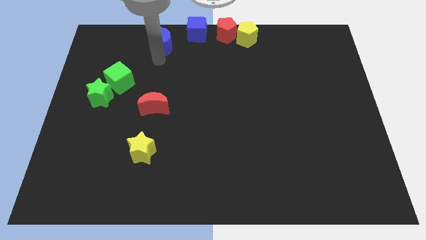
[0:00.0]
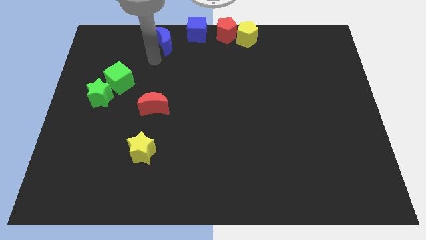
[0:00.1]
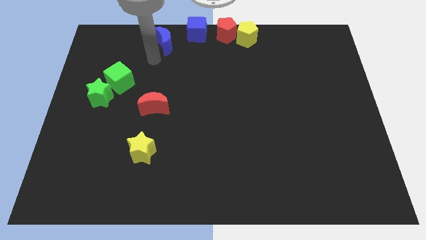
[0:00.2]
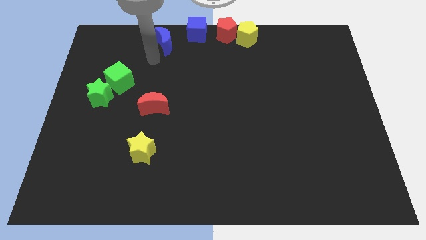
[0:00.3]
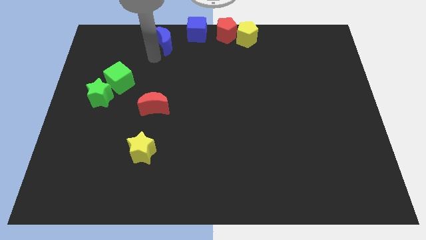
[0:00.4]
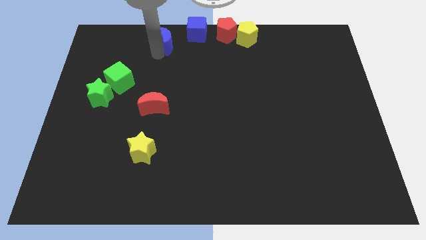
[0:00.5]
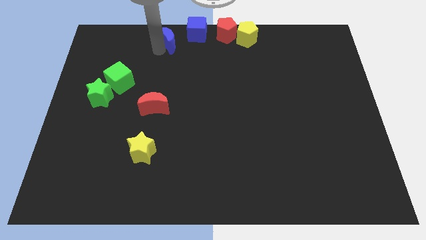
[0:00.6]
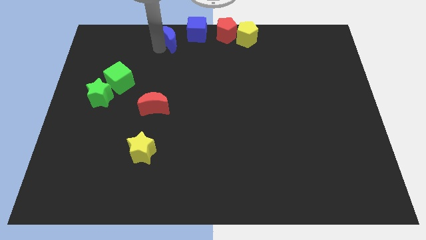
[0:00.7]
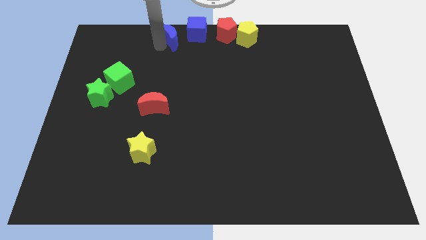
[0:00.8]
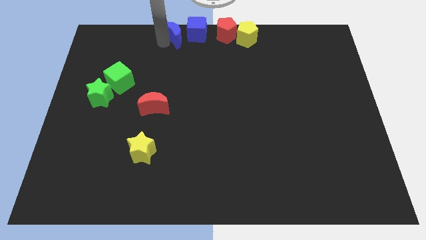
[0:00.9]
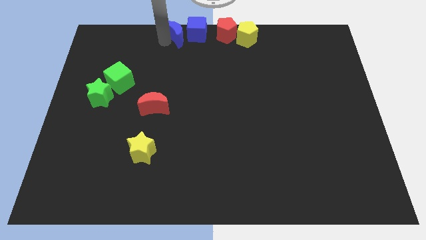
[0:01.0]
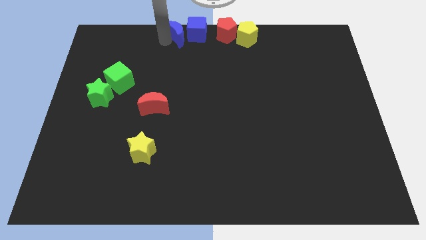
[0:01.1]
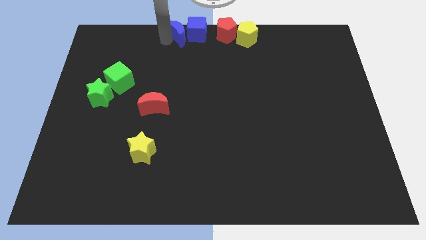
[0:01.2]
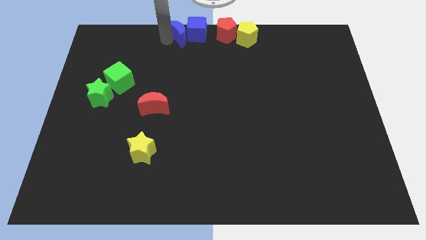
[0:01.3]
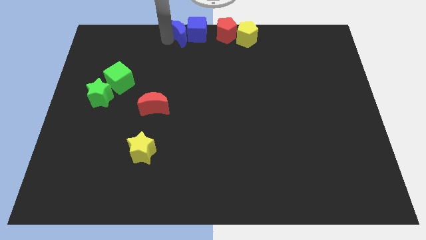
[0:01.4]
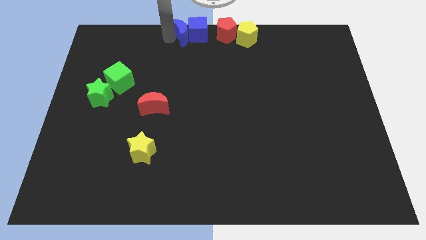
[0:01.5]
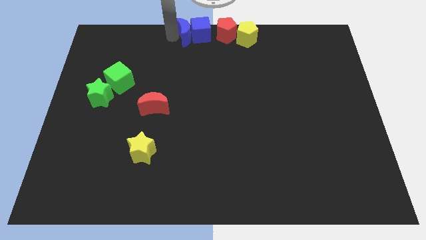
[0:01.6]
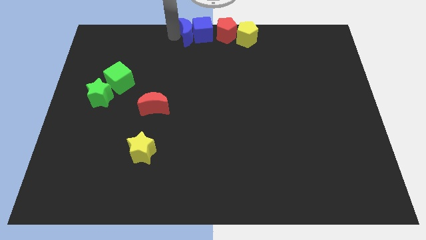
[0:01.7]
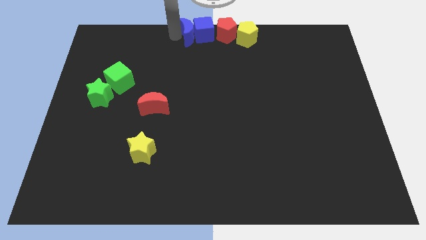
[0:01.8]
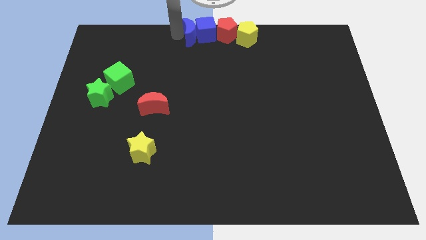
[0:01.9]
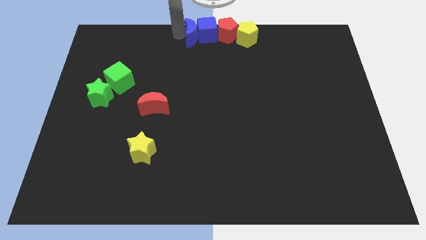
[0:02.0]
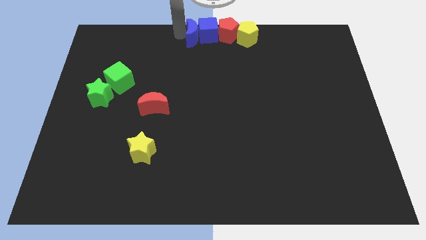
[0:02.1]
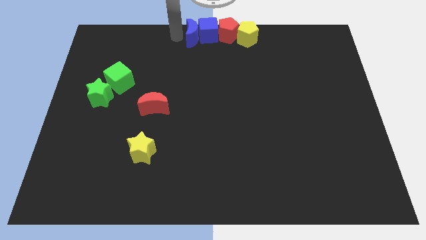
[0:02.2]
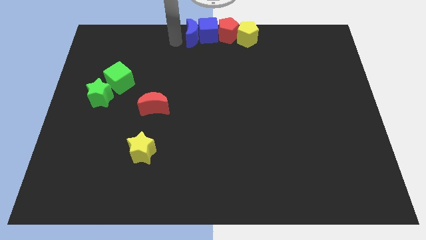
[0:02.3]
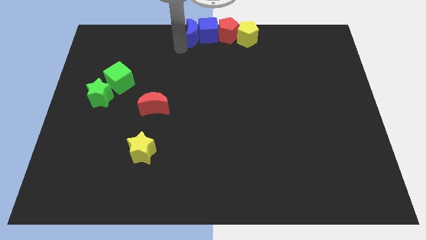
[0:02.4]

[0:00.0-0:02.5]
push the blue moon into blue cube to the left

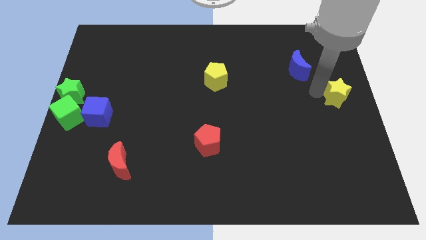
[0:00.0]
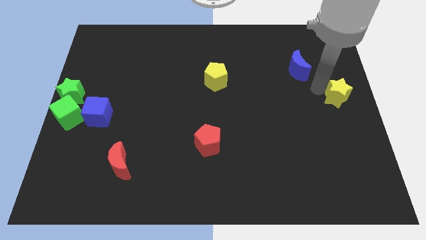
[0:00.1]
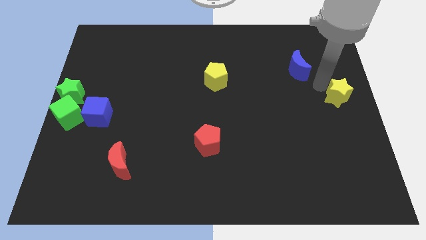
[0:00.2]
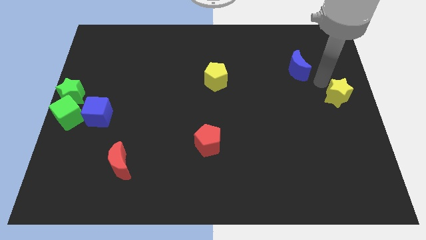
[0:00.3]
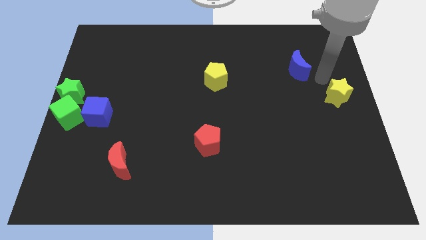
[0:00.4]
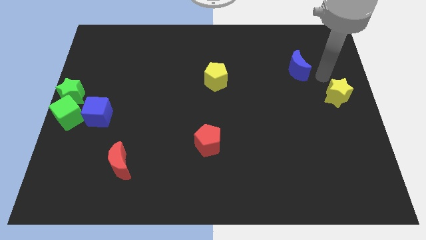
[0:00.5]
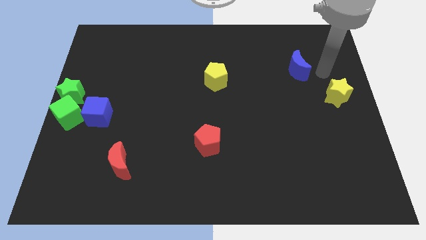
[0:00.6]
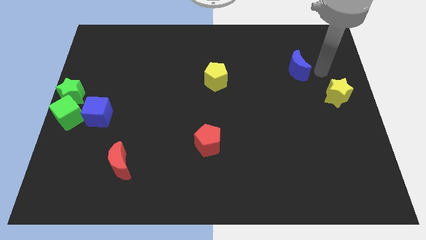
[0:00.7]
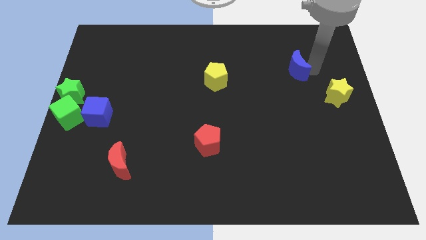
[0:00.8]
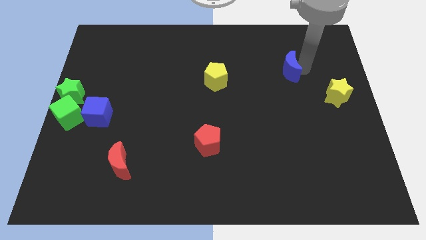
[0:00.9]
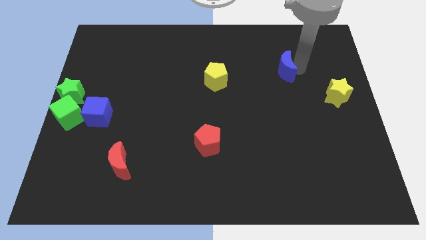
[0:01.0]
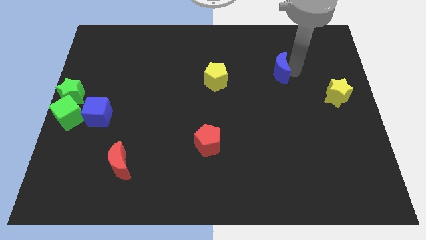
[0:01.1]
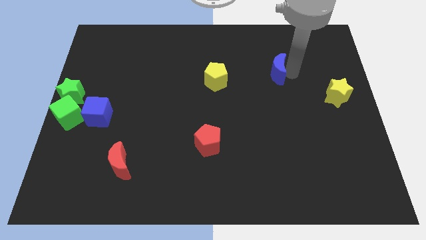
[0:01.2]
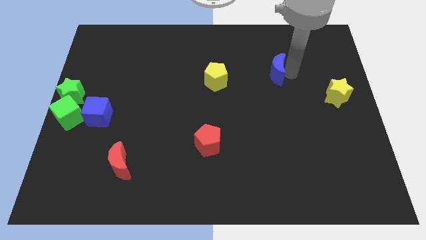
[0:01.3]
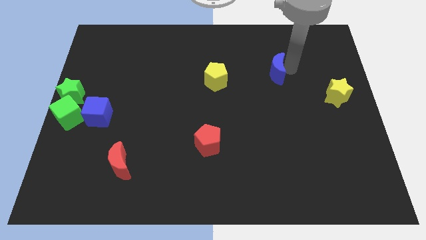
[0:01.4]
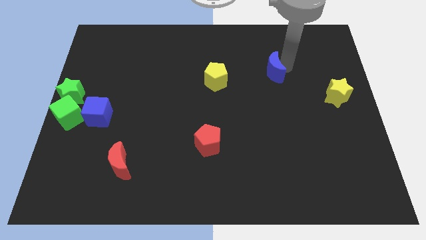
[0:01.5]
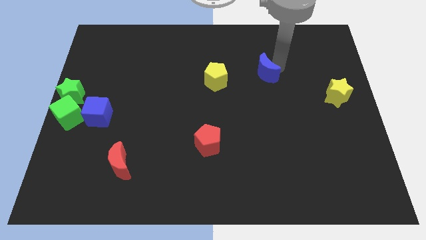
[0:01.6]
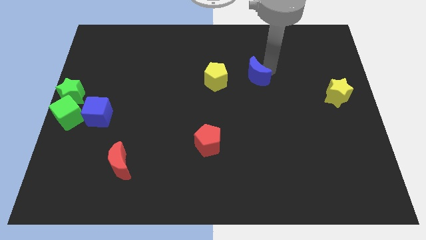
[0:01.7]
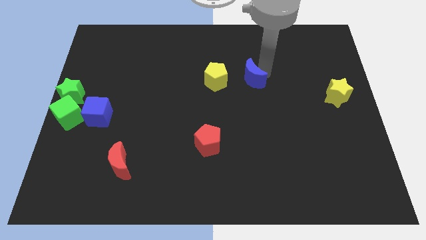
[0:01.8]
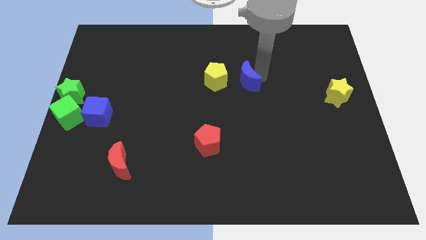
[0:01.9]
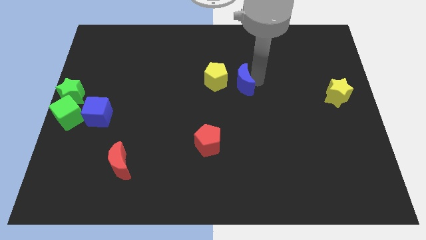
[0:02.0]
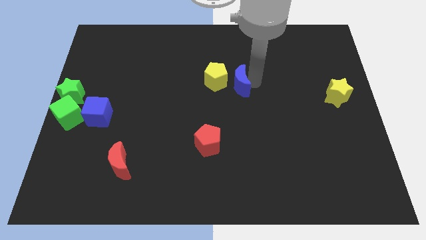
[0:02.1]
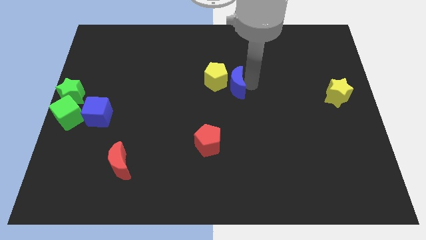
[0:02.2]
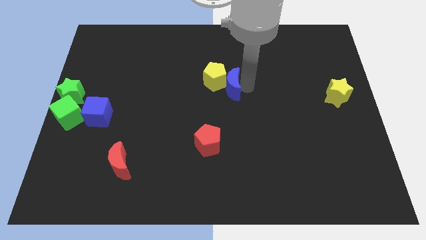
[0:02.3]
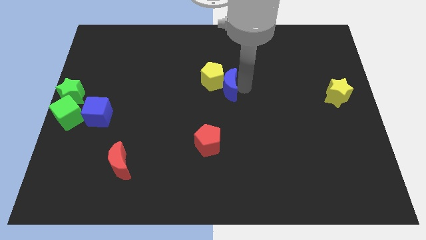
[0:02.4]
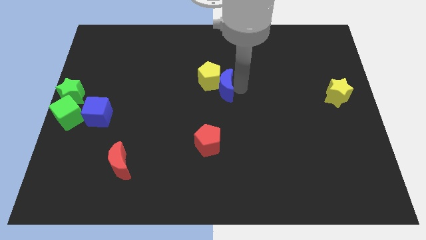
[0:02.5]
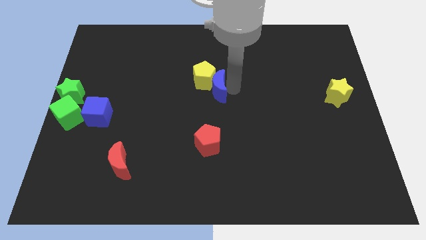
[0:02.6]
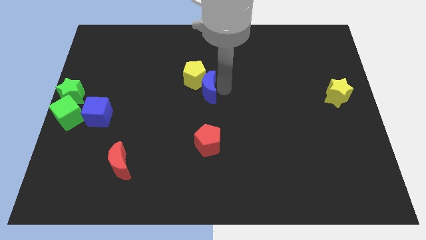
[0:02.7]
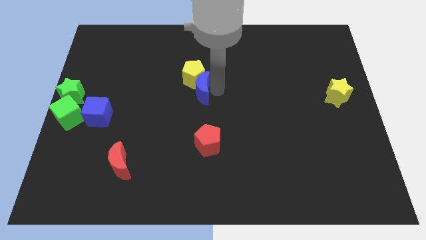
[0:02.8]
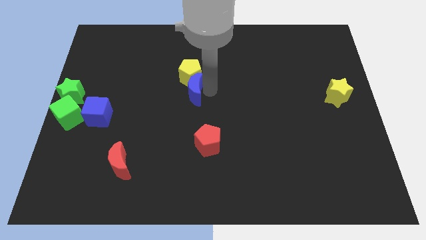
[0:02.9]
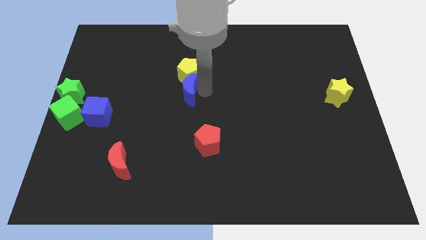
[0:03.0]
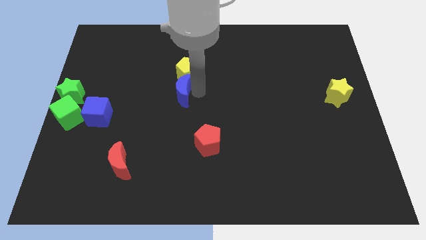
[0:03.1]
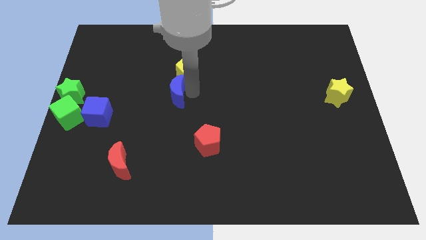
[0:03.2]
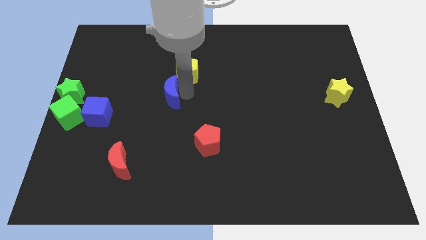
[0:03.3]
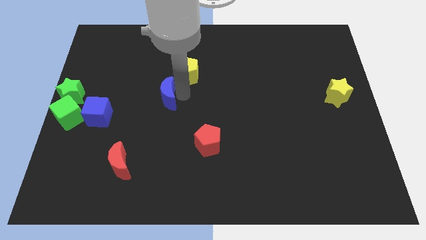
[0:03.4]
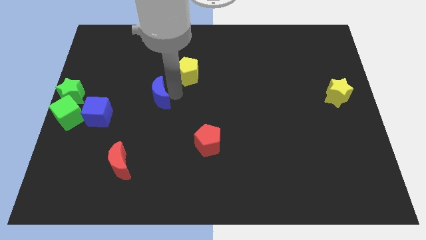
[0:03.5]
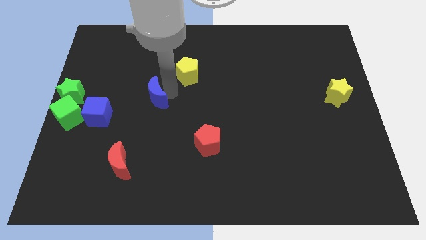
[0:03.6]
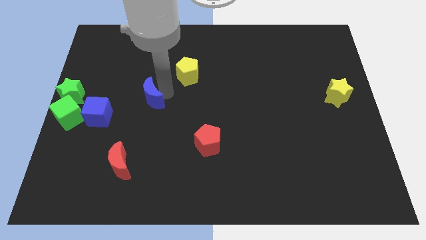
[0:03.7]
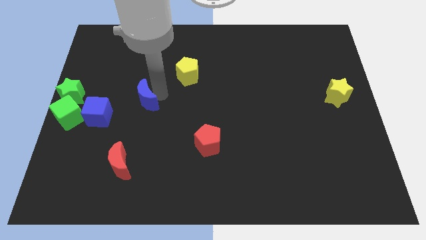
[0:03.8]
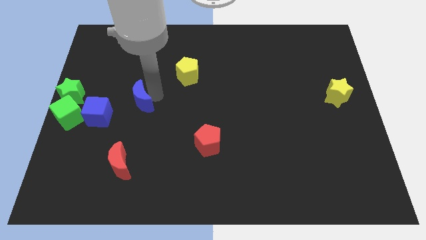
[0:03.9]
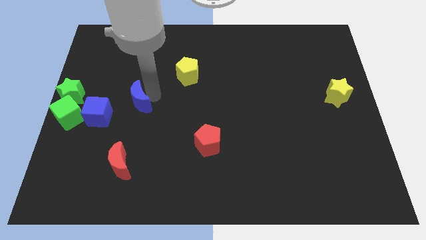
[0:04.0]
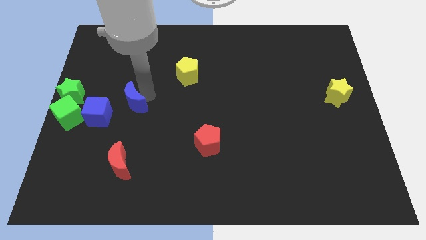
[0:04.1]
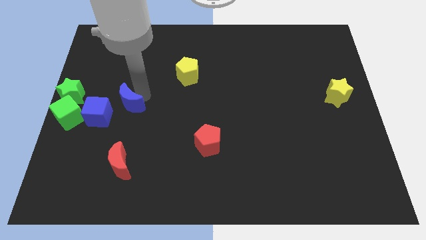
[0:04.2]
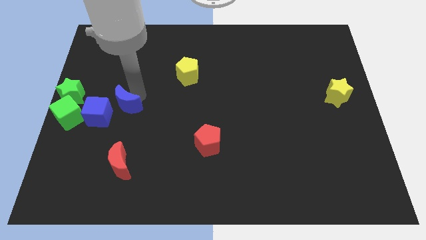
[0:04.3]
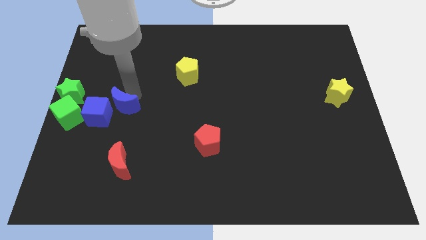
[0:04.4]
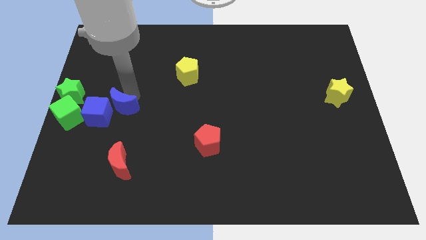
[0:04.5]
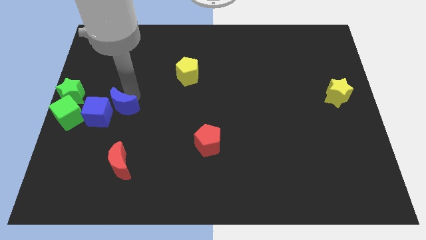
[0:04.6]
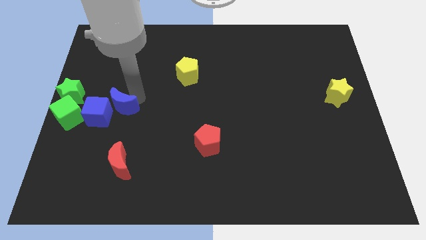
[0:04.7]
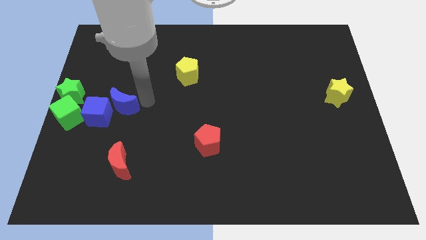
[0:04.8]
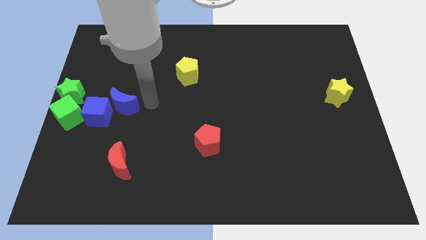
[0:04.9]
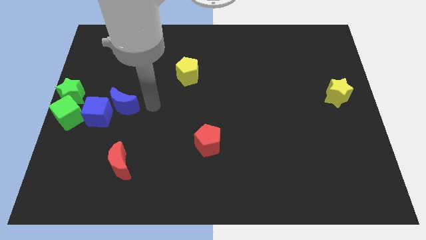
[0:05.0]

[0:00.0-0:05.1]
push the blue crescent towards the top right side of the blue cube

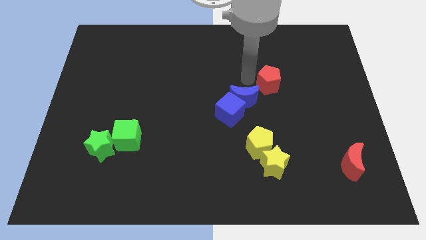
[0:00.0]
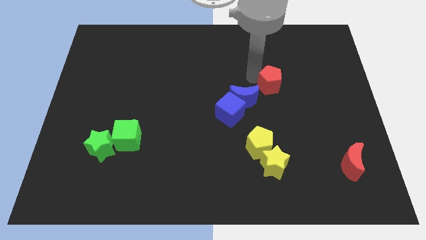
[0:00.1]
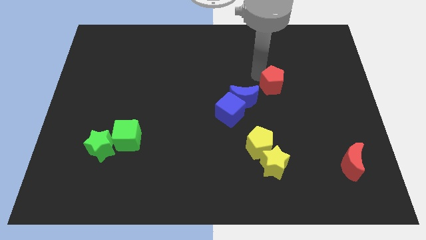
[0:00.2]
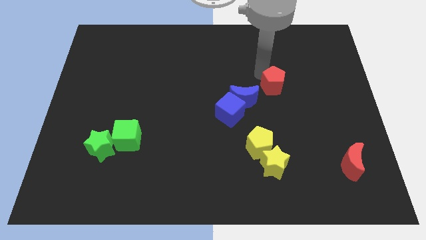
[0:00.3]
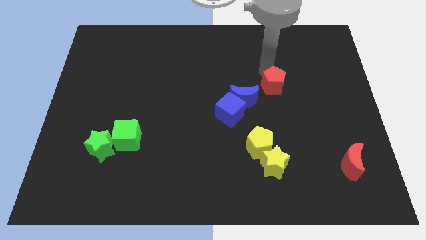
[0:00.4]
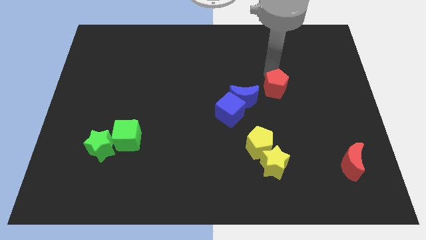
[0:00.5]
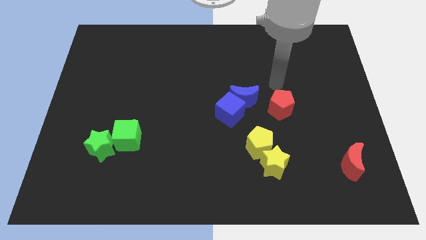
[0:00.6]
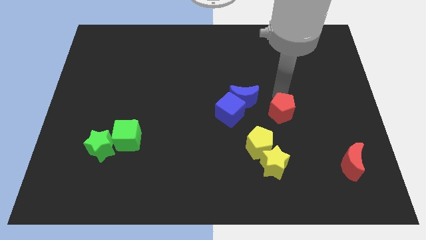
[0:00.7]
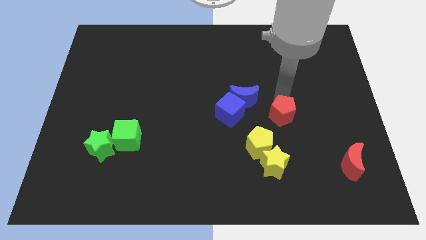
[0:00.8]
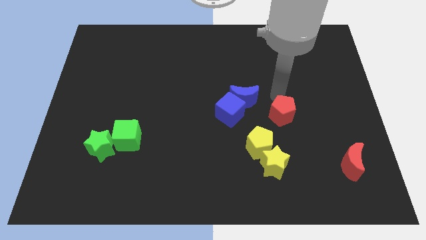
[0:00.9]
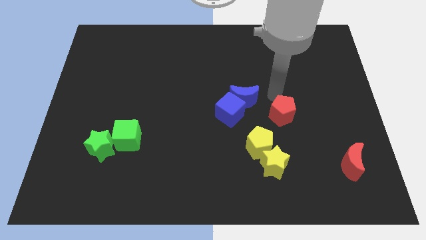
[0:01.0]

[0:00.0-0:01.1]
place the red pentagon top right to the yellow pentagon

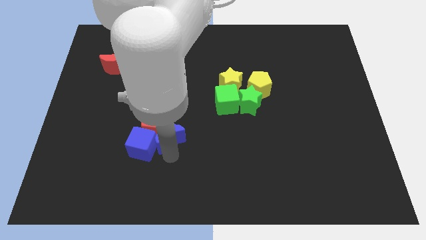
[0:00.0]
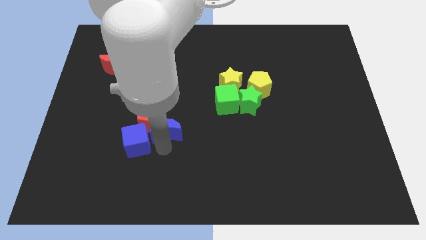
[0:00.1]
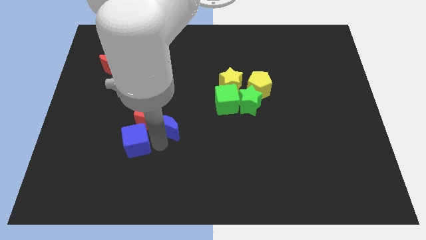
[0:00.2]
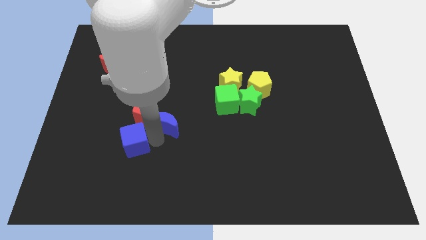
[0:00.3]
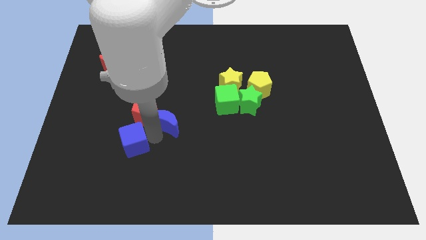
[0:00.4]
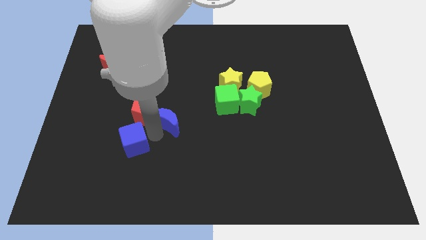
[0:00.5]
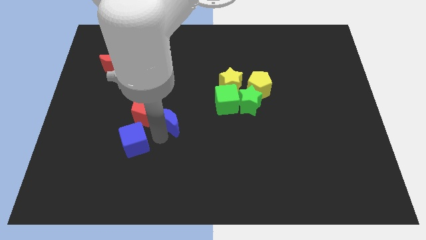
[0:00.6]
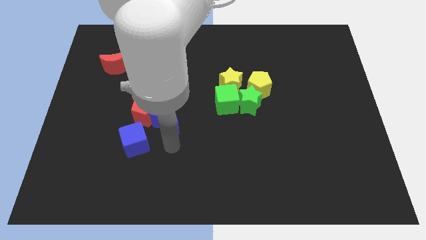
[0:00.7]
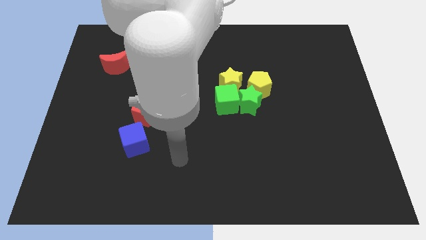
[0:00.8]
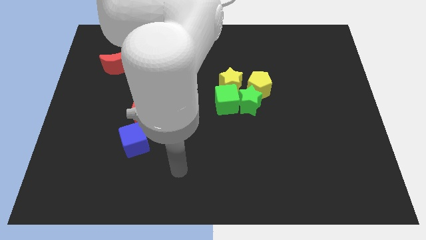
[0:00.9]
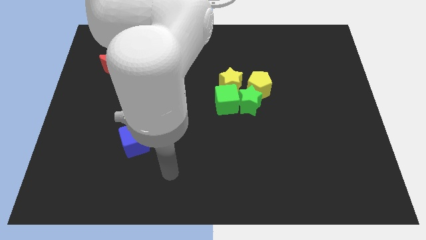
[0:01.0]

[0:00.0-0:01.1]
separate blue moon from blue cube
